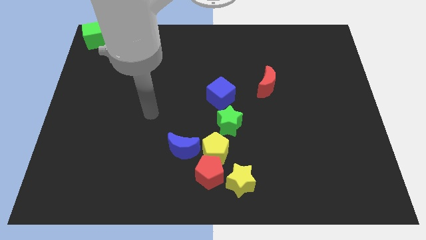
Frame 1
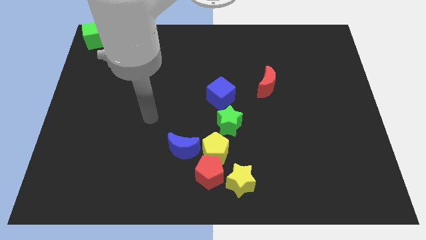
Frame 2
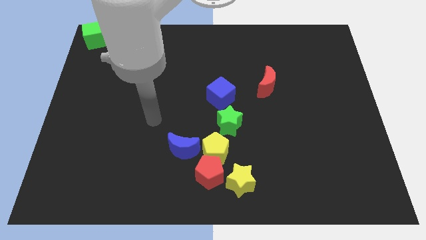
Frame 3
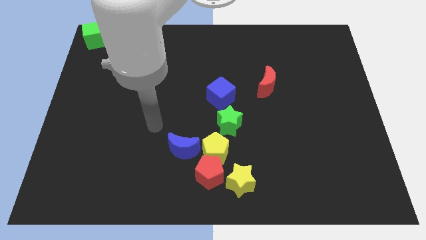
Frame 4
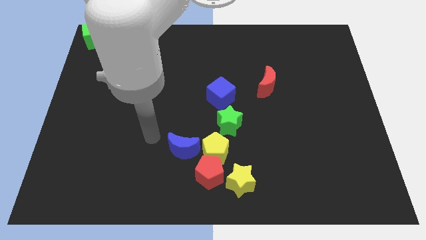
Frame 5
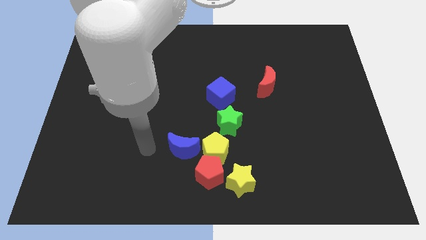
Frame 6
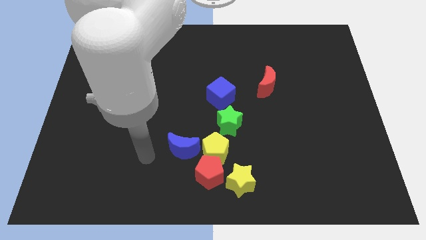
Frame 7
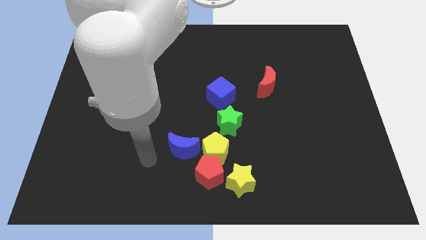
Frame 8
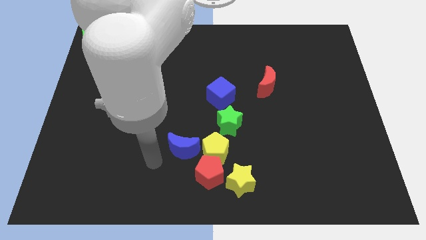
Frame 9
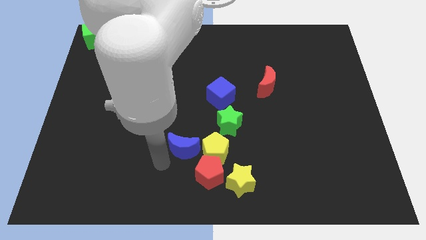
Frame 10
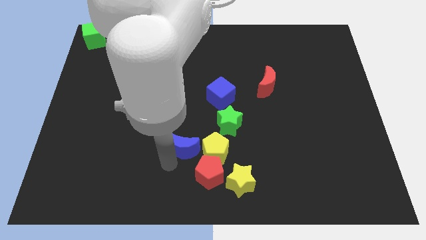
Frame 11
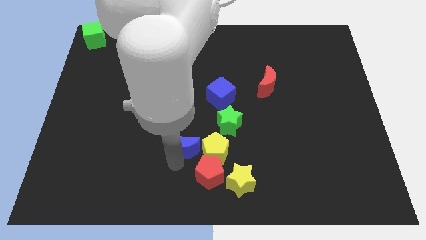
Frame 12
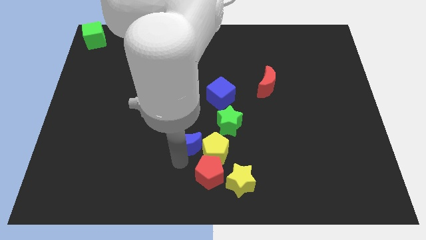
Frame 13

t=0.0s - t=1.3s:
touch the bottom of blue moon

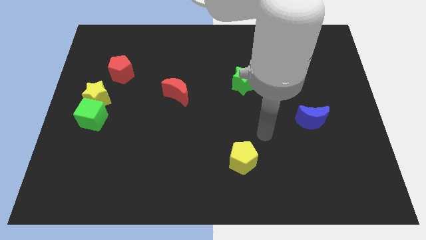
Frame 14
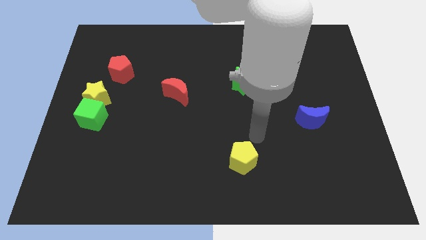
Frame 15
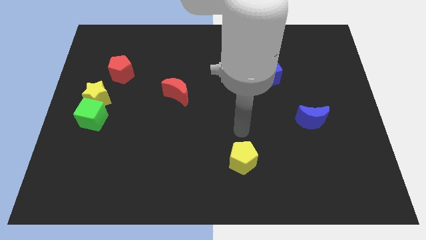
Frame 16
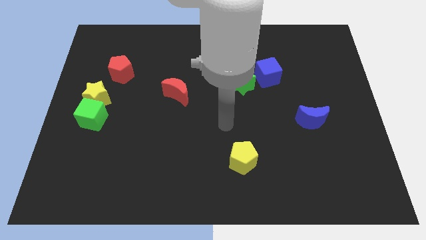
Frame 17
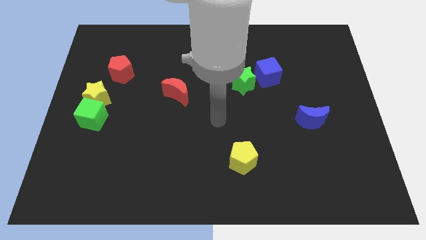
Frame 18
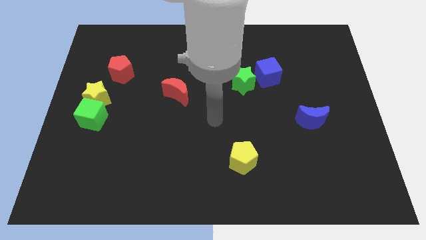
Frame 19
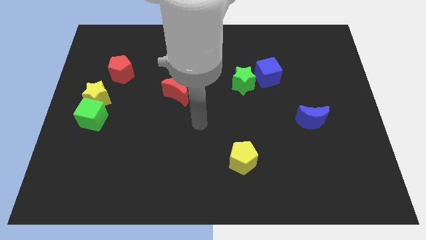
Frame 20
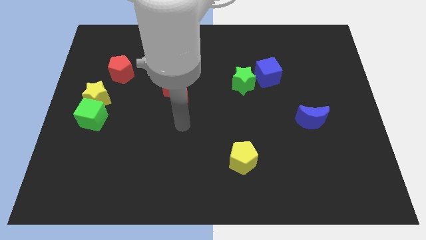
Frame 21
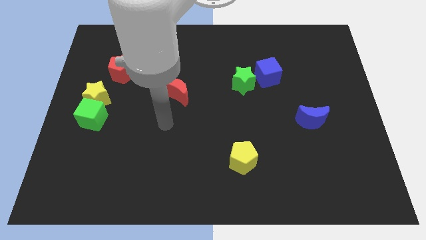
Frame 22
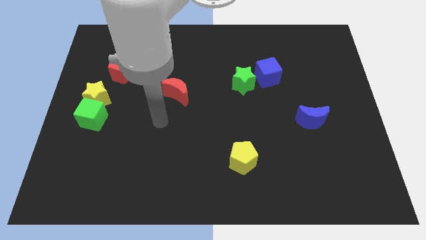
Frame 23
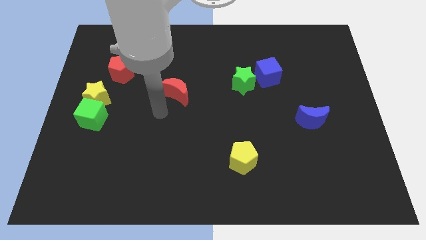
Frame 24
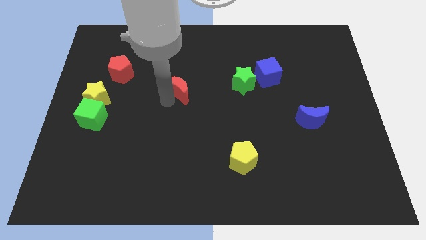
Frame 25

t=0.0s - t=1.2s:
move your arm to the bottom left to the red crescent

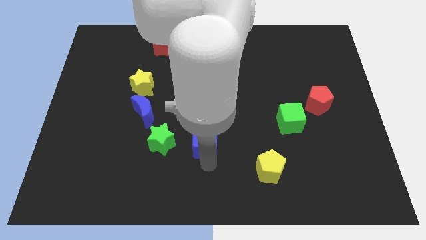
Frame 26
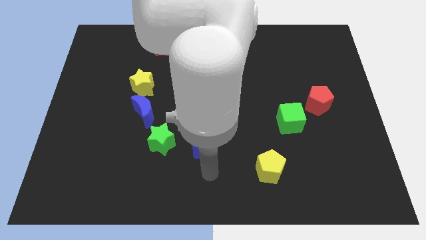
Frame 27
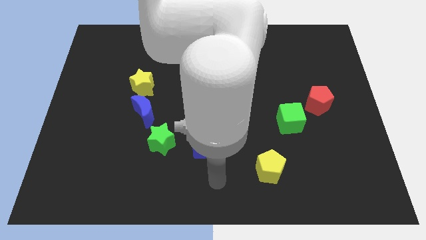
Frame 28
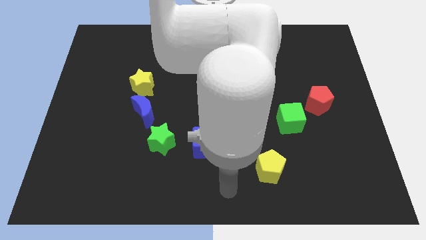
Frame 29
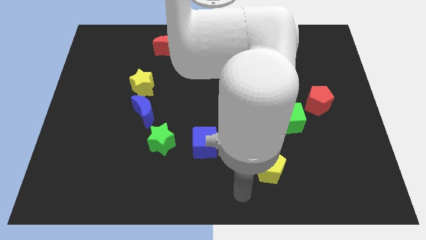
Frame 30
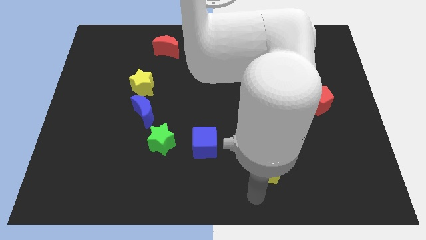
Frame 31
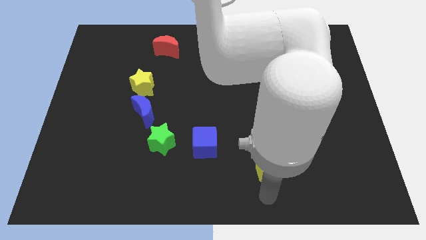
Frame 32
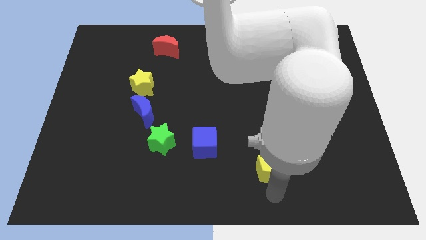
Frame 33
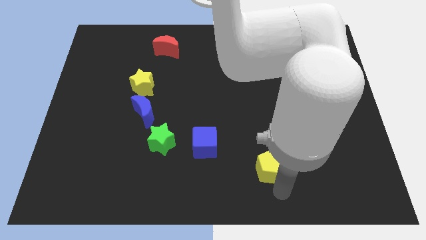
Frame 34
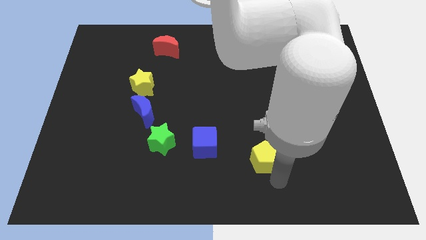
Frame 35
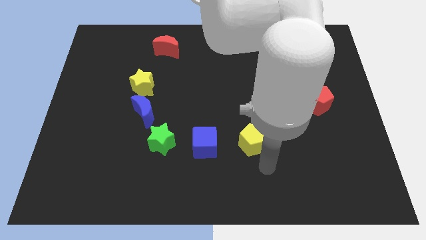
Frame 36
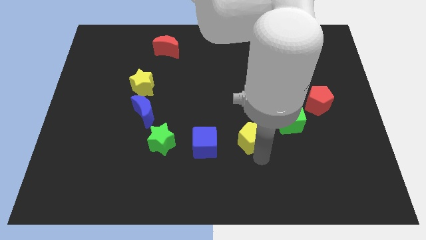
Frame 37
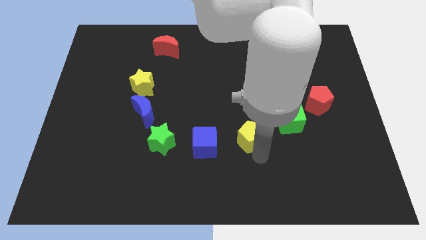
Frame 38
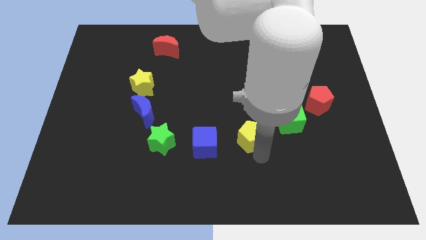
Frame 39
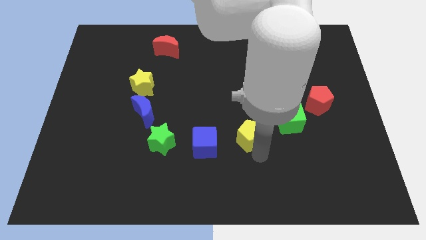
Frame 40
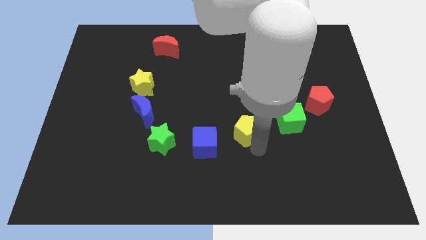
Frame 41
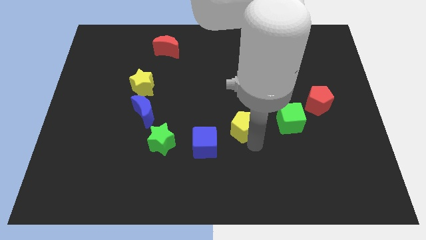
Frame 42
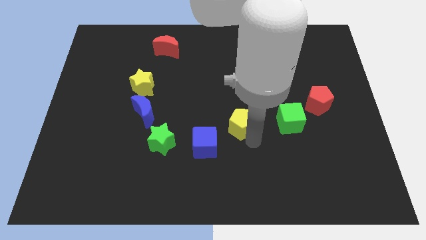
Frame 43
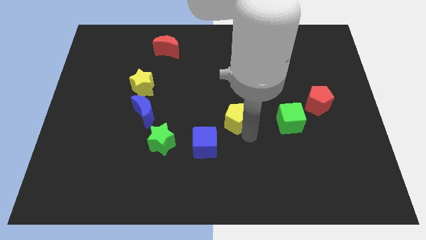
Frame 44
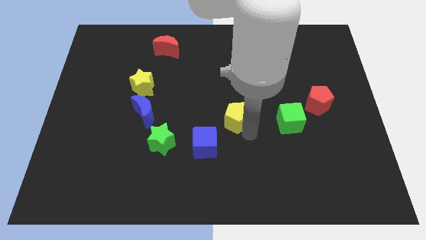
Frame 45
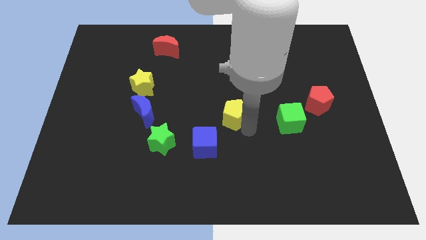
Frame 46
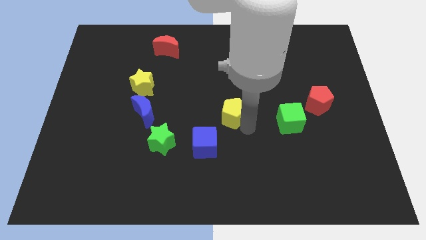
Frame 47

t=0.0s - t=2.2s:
push the yellow pentagon towards the center of the board

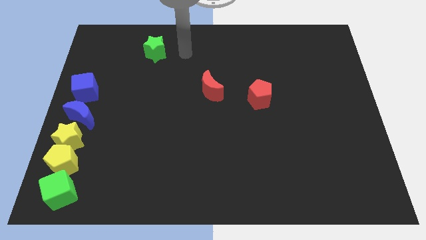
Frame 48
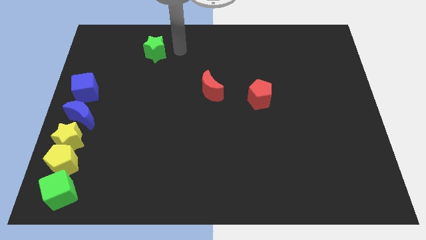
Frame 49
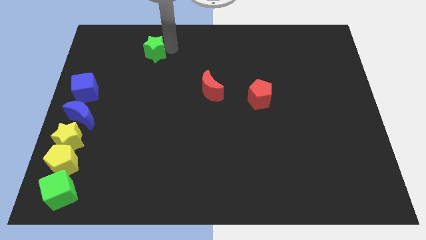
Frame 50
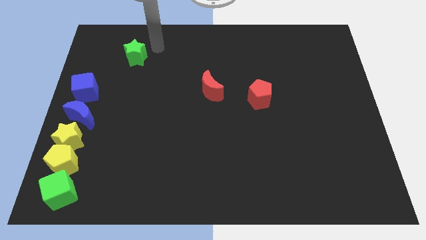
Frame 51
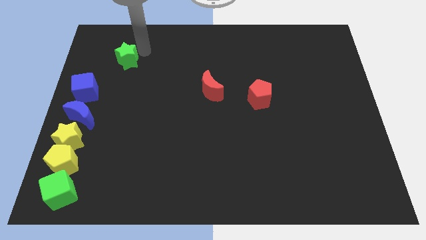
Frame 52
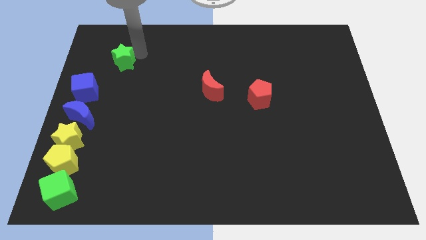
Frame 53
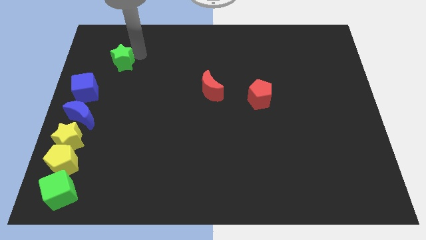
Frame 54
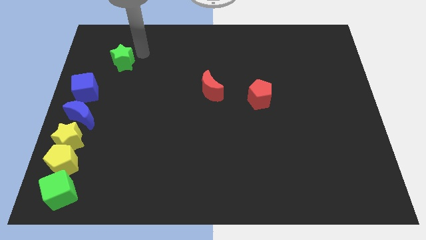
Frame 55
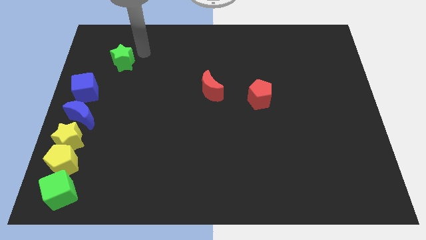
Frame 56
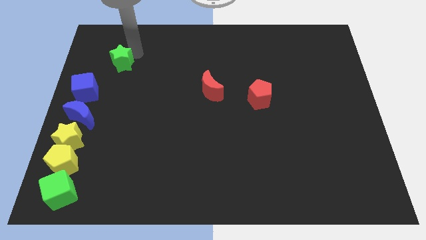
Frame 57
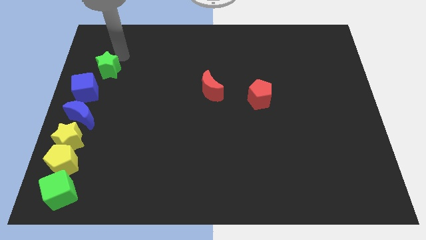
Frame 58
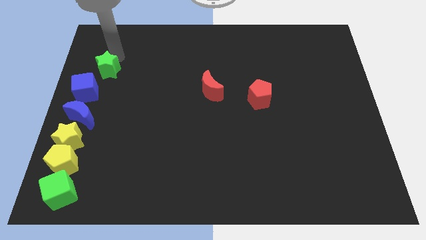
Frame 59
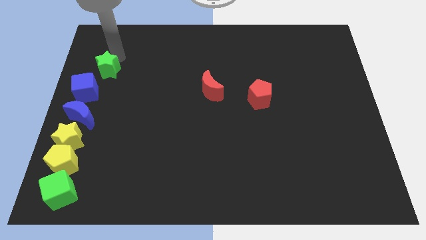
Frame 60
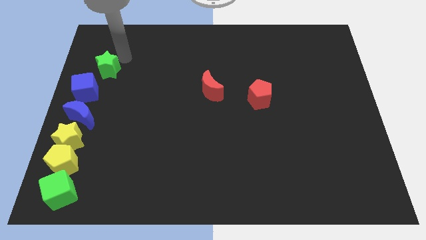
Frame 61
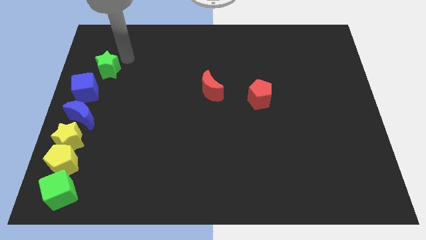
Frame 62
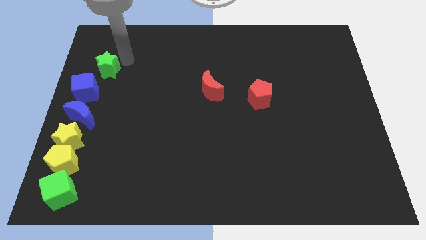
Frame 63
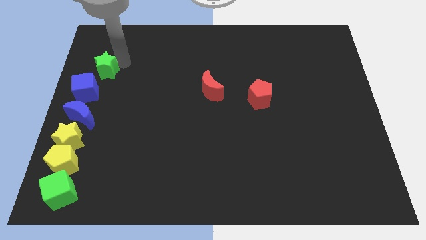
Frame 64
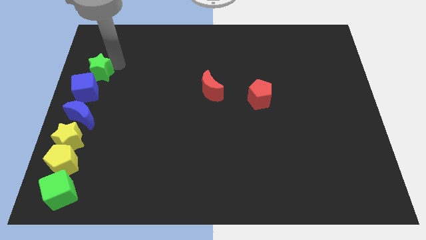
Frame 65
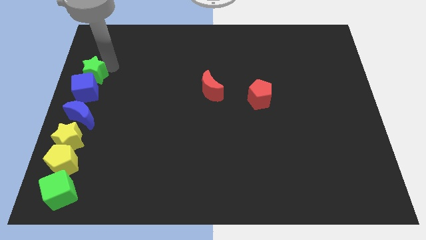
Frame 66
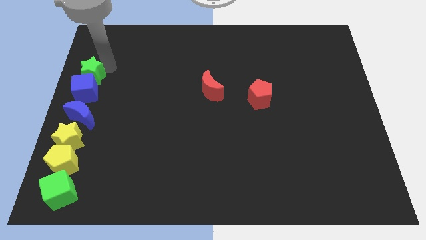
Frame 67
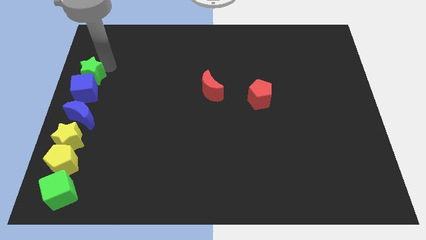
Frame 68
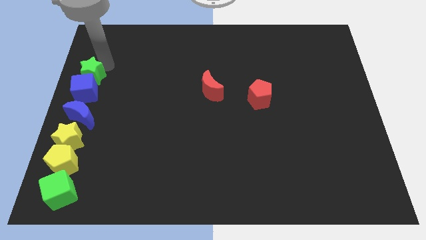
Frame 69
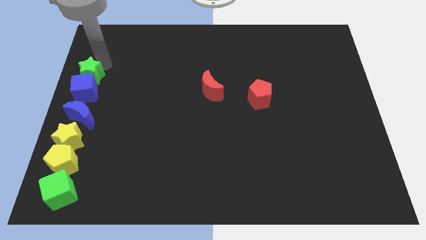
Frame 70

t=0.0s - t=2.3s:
move the green star to the top of the blue cube

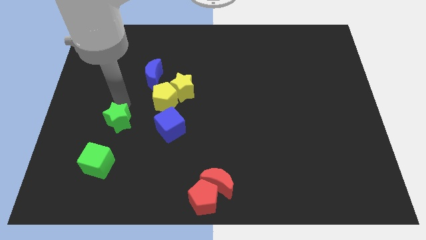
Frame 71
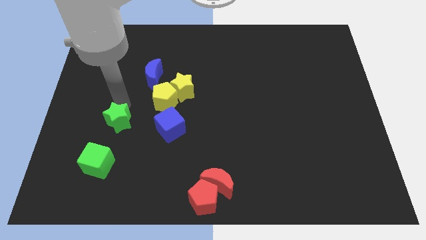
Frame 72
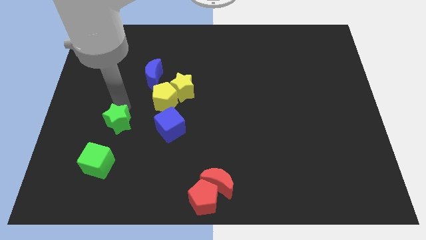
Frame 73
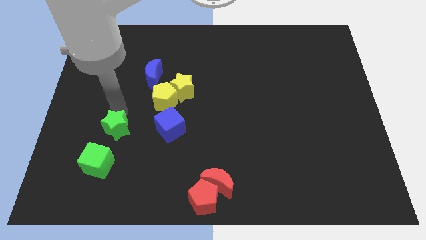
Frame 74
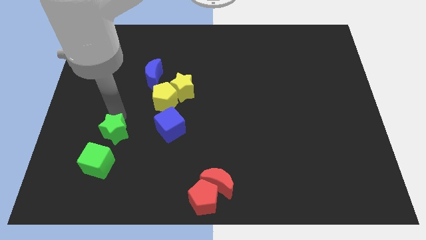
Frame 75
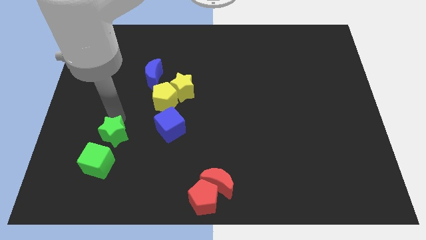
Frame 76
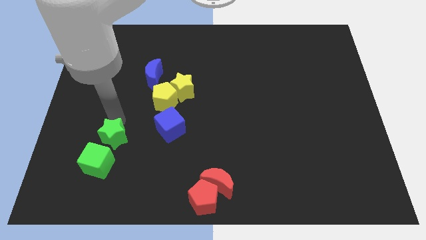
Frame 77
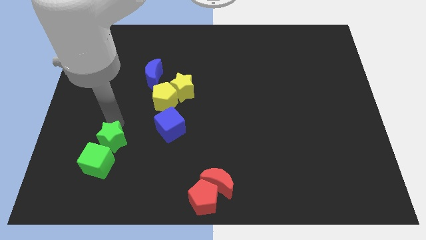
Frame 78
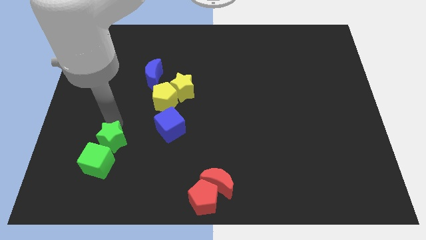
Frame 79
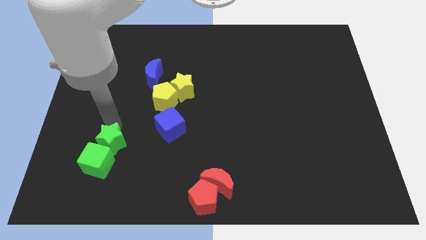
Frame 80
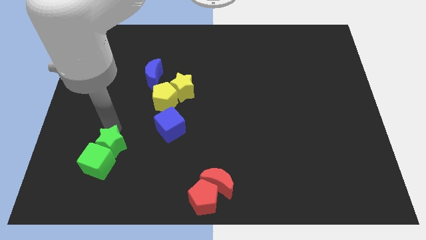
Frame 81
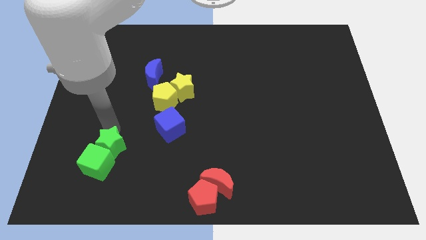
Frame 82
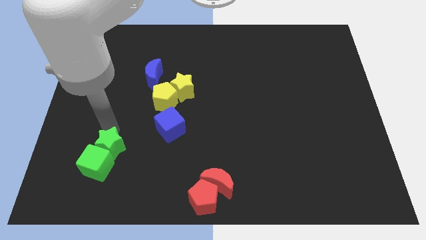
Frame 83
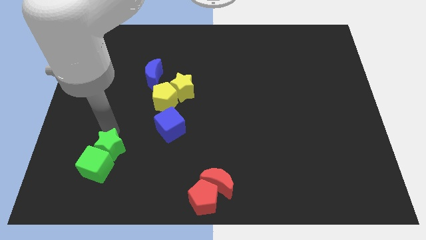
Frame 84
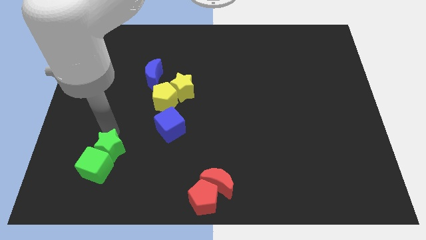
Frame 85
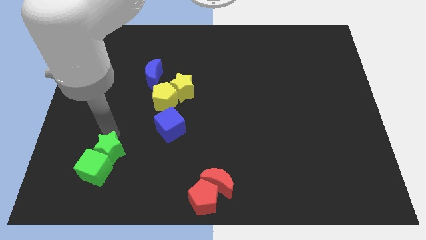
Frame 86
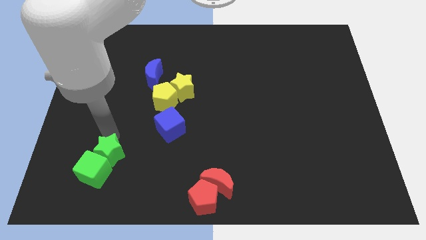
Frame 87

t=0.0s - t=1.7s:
push the green star in to the green cube

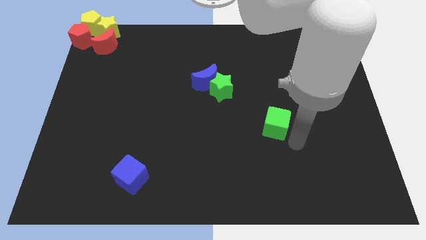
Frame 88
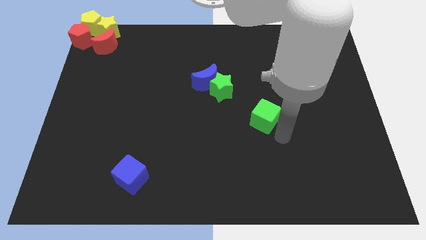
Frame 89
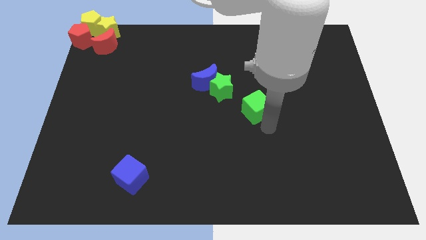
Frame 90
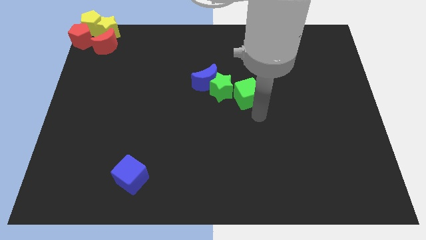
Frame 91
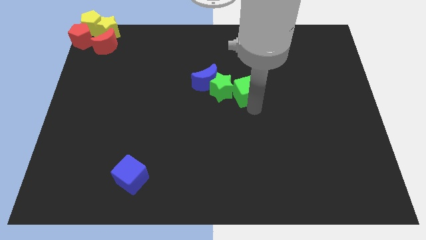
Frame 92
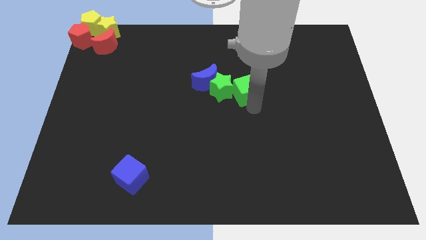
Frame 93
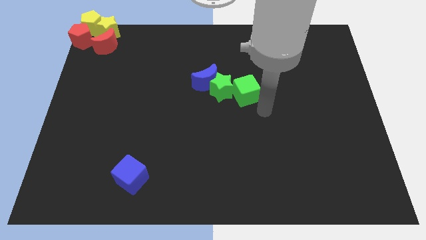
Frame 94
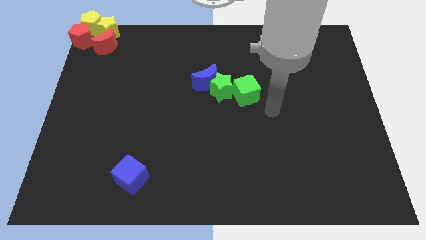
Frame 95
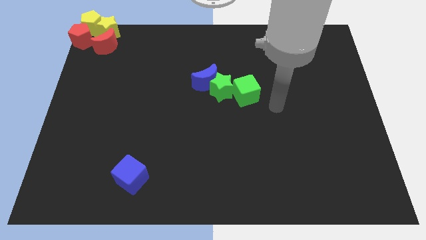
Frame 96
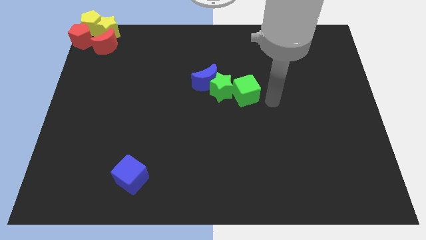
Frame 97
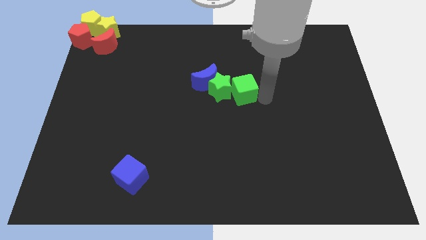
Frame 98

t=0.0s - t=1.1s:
place green block right of green star
